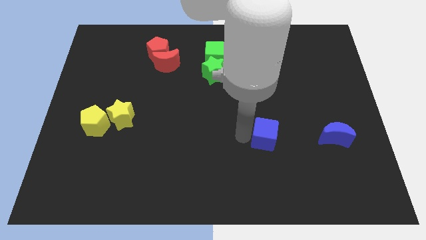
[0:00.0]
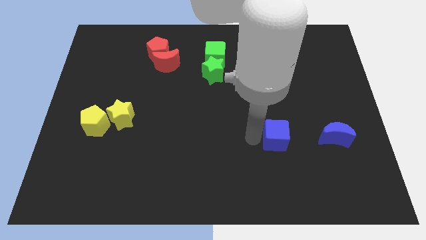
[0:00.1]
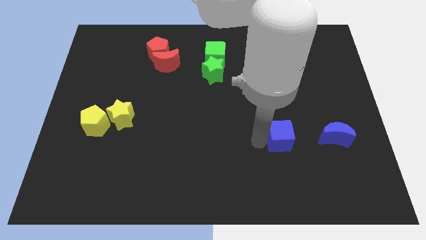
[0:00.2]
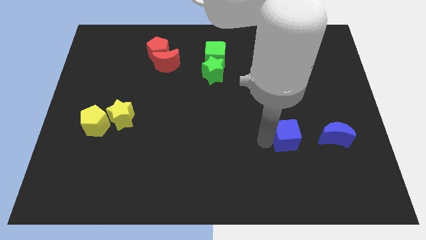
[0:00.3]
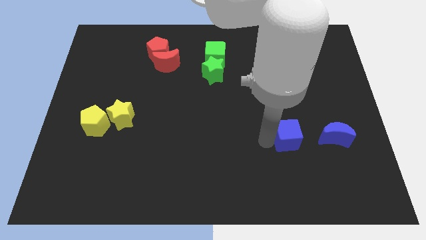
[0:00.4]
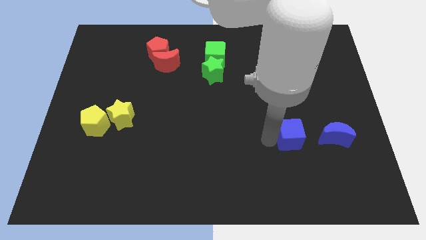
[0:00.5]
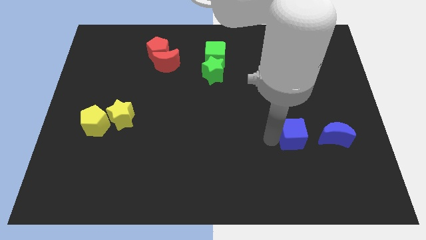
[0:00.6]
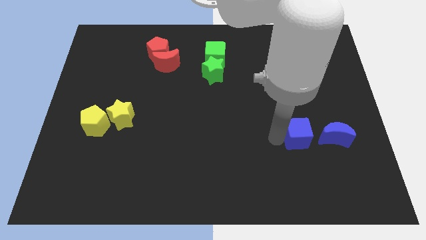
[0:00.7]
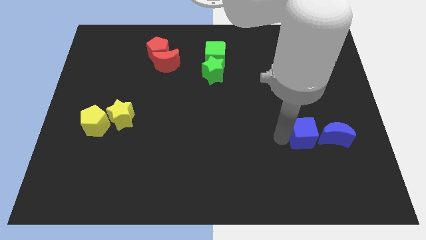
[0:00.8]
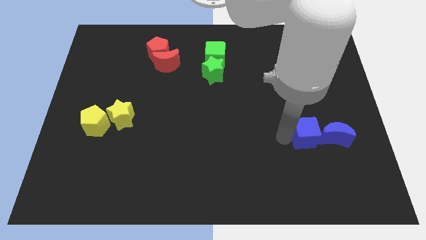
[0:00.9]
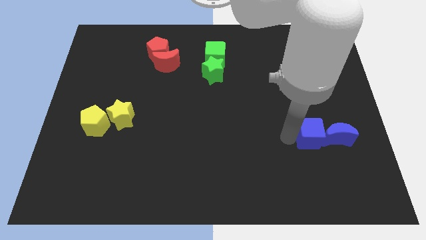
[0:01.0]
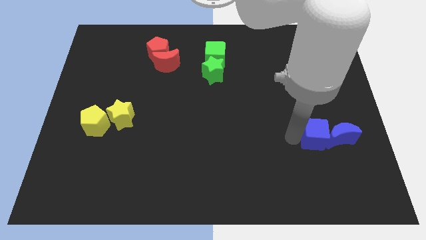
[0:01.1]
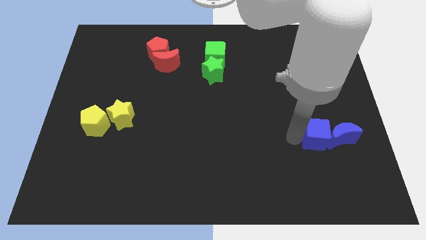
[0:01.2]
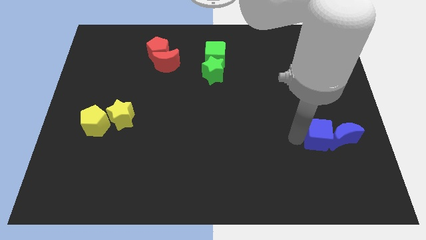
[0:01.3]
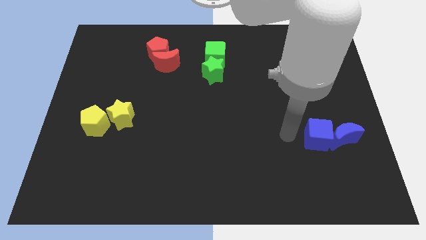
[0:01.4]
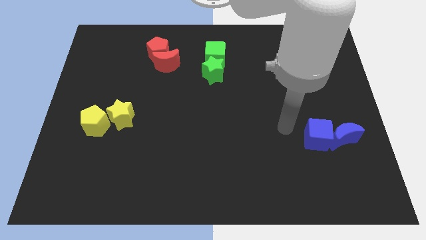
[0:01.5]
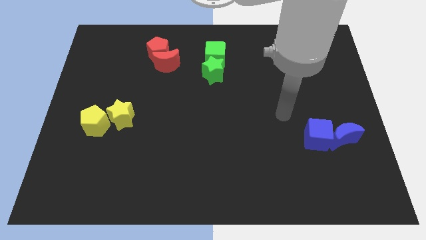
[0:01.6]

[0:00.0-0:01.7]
push the blue cube into the blue crescent

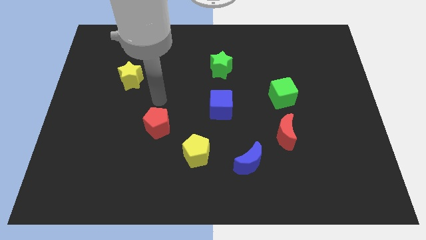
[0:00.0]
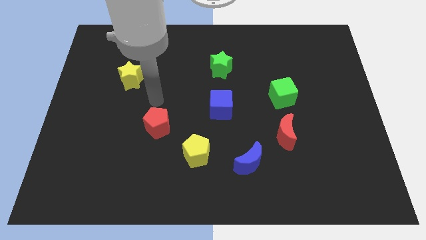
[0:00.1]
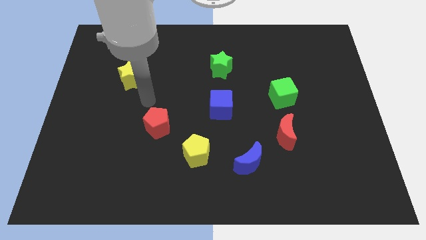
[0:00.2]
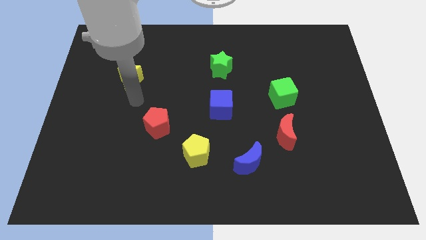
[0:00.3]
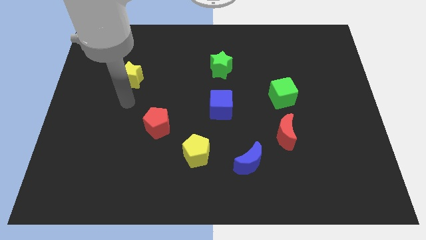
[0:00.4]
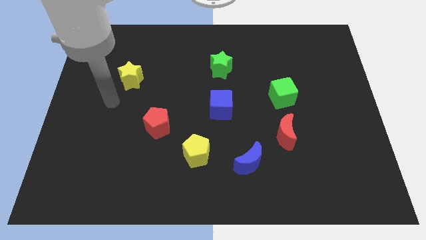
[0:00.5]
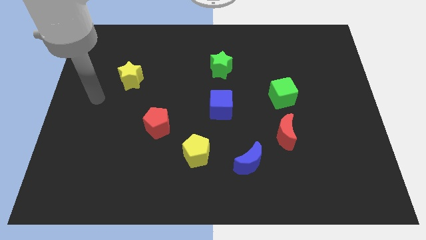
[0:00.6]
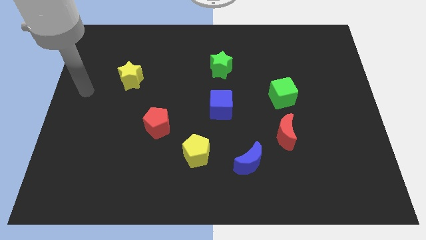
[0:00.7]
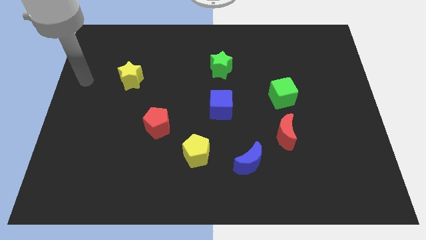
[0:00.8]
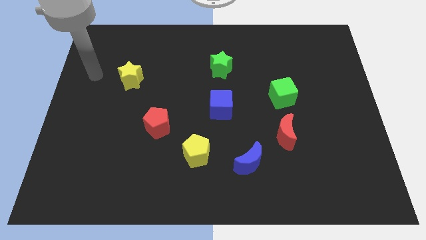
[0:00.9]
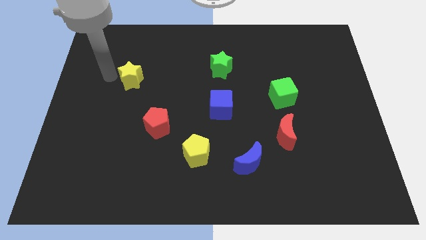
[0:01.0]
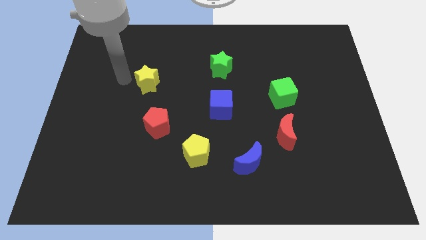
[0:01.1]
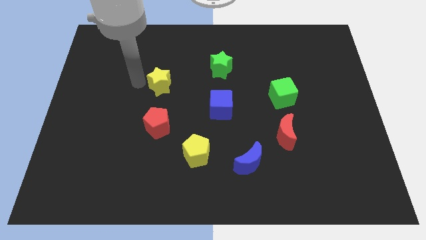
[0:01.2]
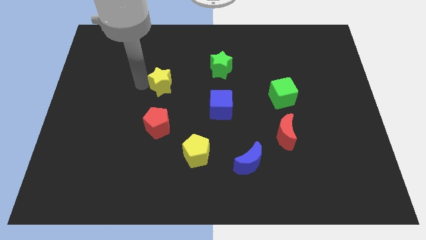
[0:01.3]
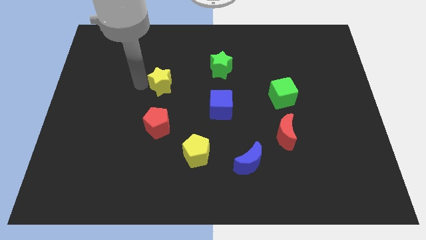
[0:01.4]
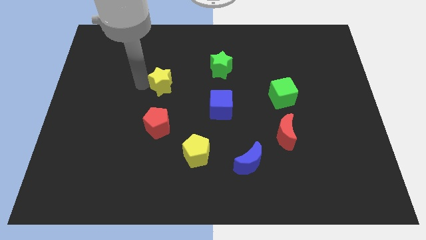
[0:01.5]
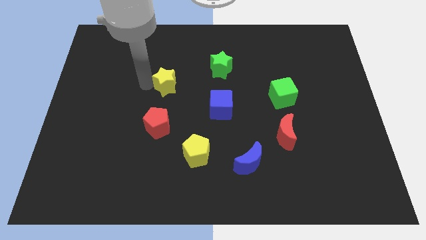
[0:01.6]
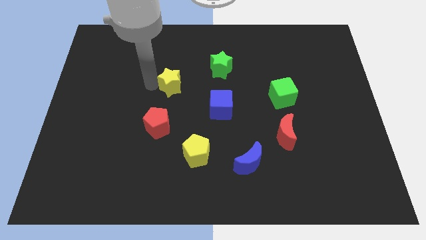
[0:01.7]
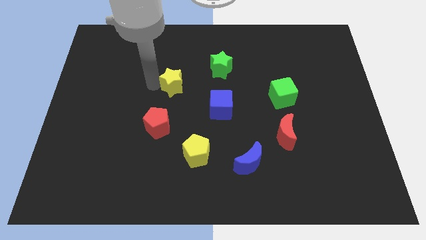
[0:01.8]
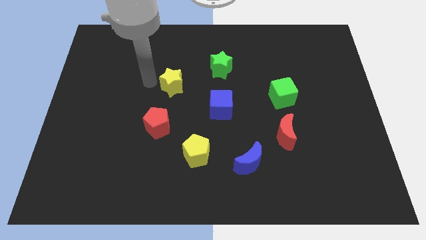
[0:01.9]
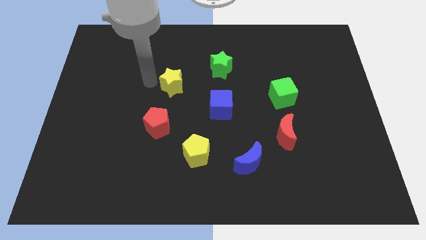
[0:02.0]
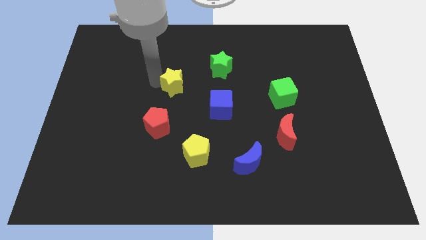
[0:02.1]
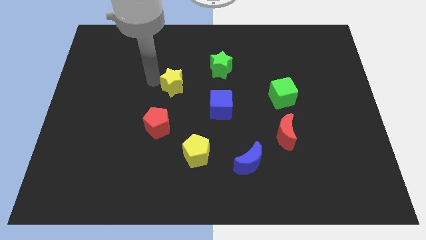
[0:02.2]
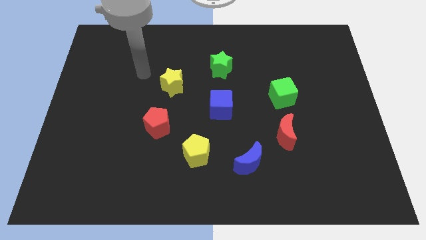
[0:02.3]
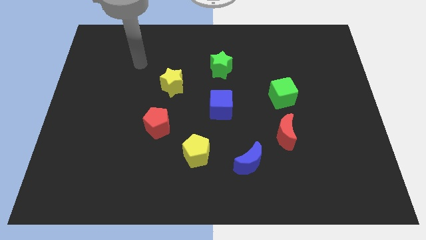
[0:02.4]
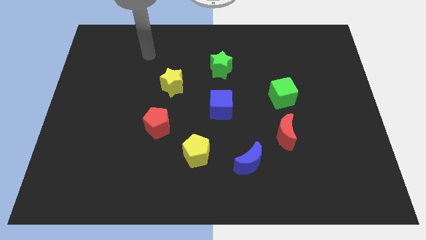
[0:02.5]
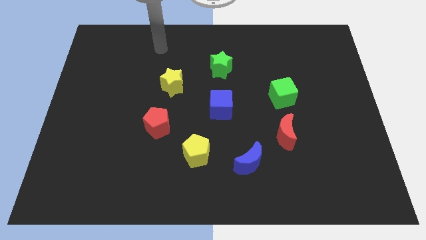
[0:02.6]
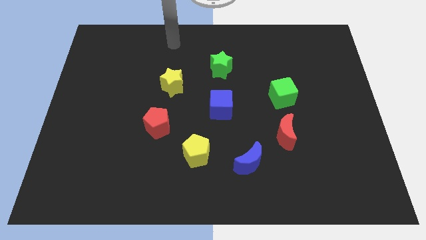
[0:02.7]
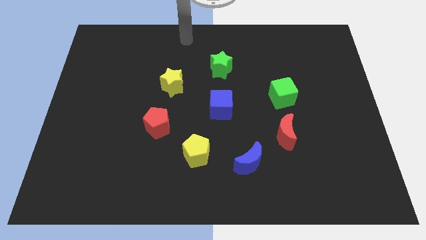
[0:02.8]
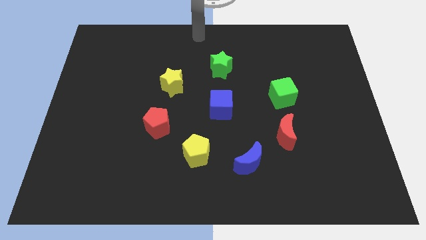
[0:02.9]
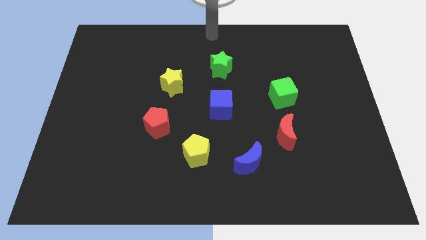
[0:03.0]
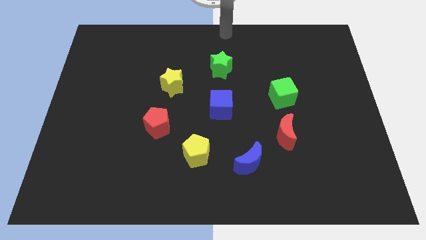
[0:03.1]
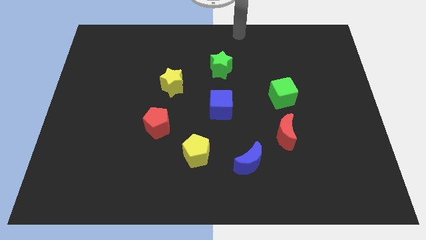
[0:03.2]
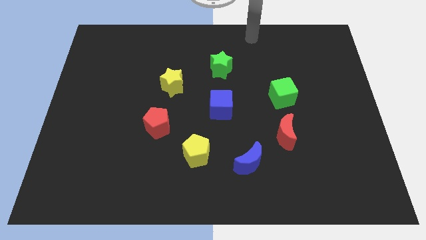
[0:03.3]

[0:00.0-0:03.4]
move the yellow star to the center of the board

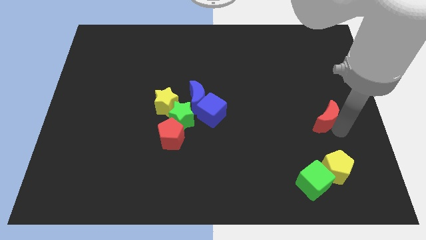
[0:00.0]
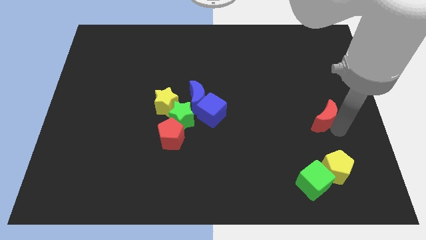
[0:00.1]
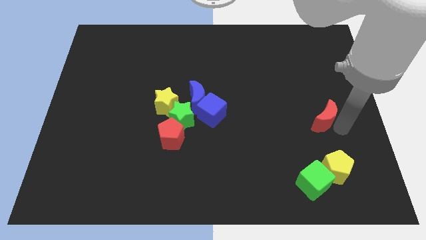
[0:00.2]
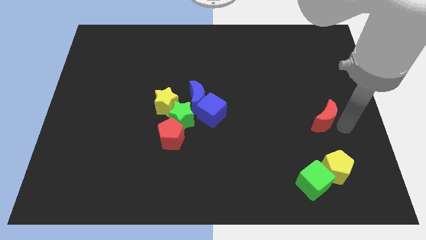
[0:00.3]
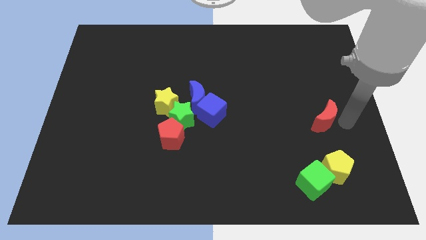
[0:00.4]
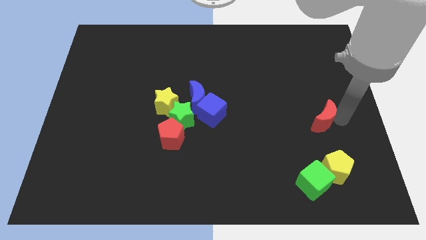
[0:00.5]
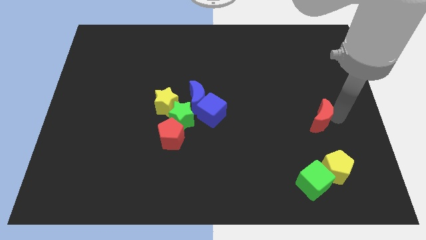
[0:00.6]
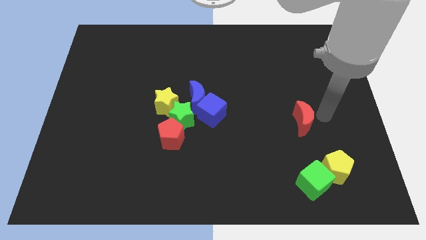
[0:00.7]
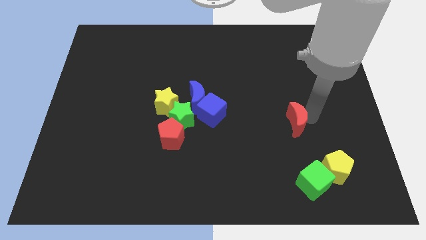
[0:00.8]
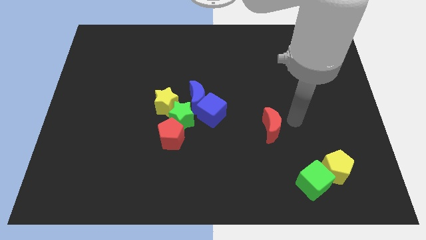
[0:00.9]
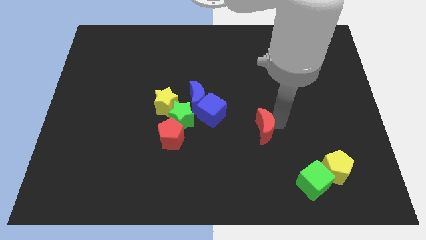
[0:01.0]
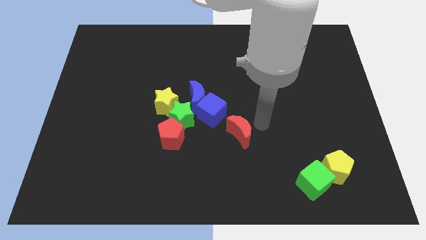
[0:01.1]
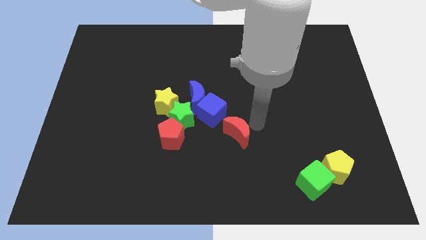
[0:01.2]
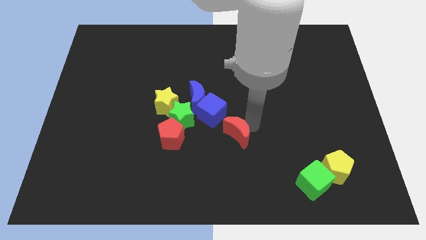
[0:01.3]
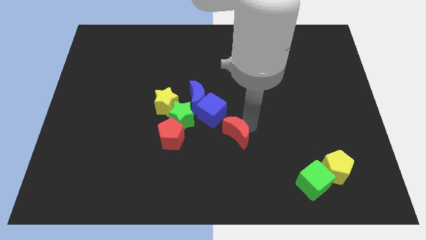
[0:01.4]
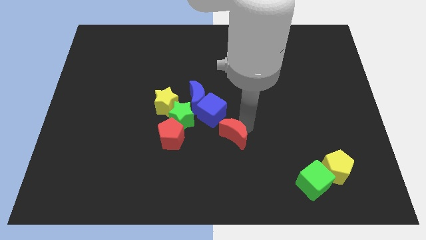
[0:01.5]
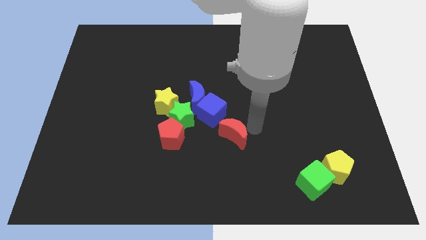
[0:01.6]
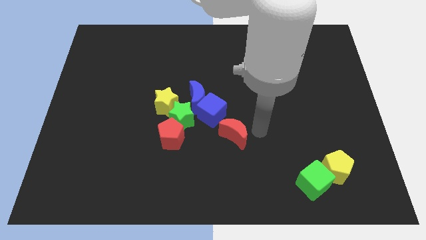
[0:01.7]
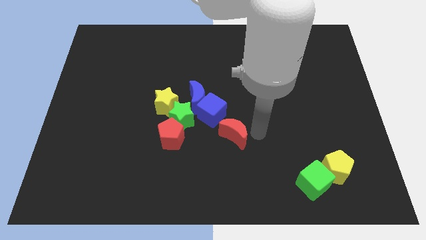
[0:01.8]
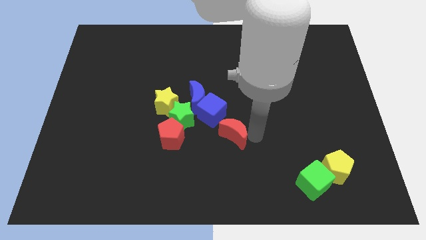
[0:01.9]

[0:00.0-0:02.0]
drag red crescent close to blue cube

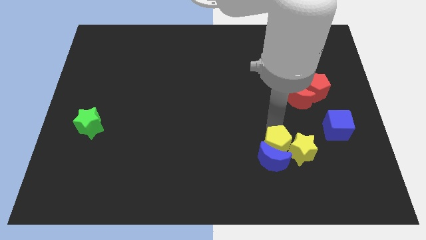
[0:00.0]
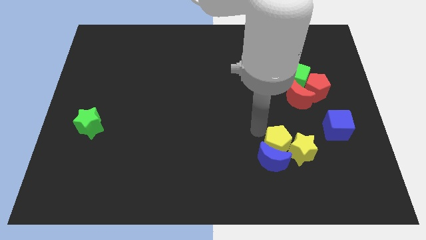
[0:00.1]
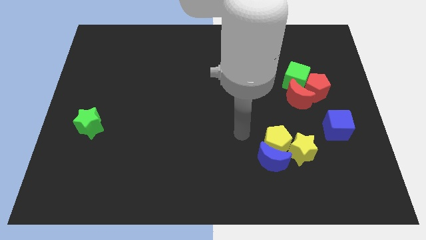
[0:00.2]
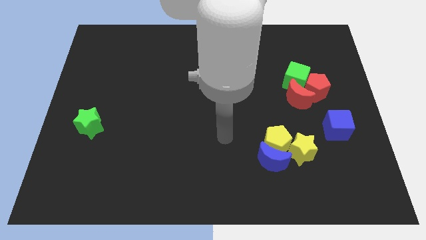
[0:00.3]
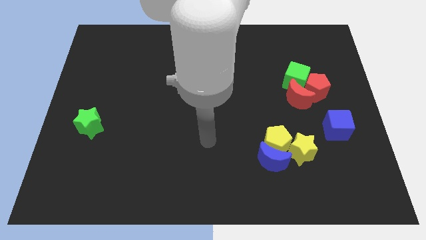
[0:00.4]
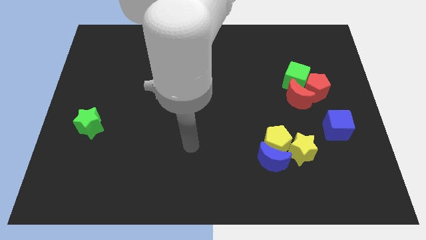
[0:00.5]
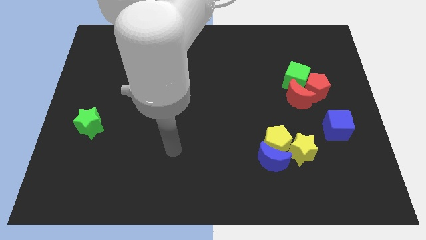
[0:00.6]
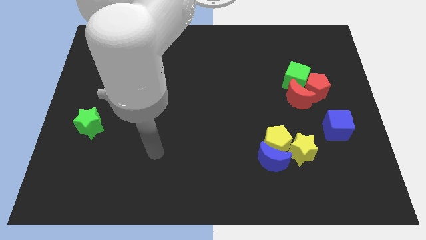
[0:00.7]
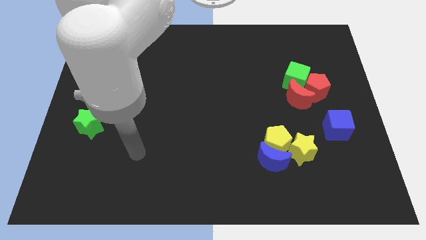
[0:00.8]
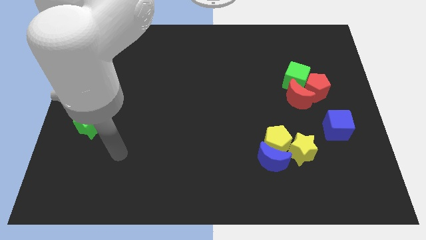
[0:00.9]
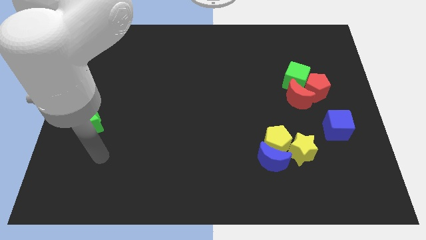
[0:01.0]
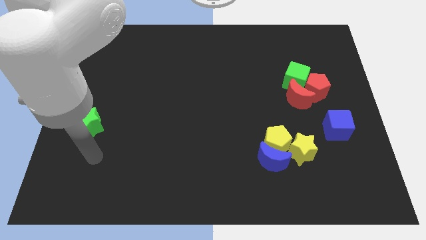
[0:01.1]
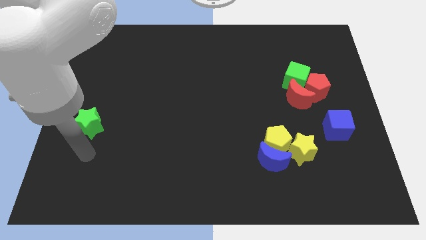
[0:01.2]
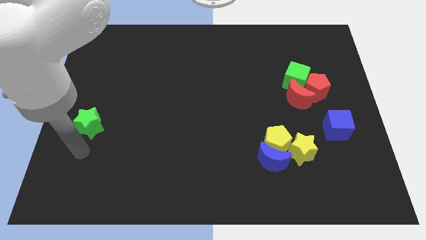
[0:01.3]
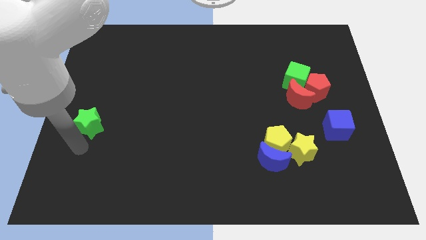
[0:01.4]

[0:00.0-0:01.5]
move your arm to the bottom of green star

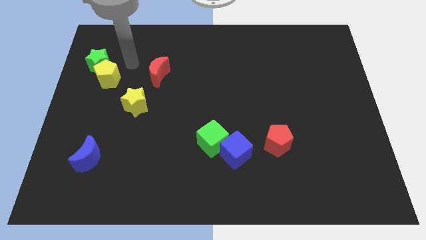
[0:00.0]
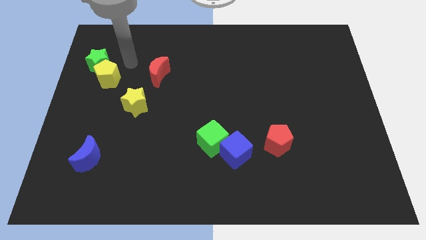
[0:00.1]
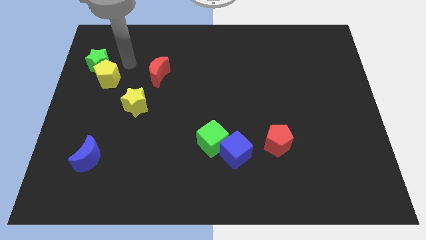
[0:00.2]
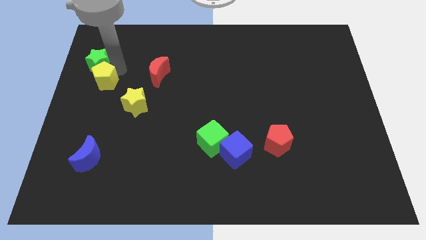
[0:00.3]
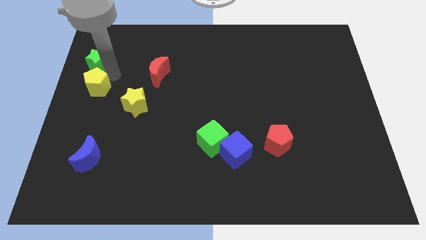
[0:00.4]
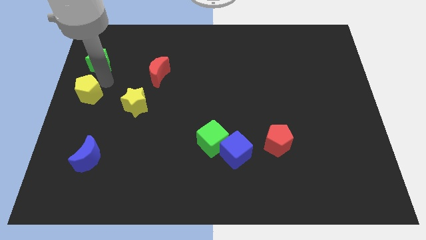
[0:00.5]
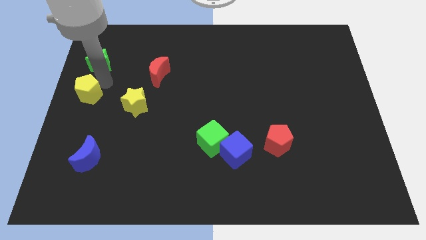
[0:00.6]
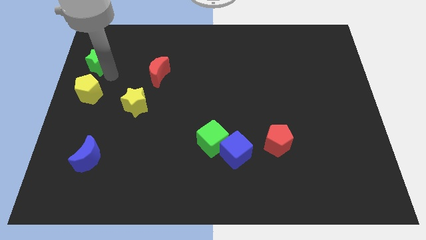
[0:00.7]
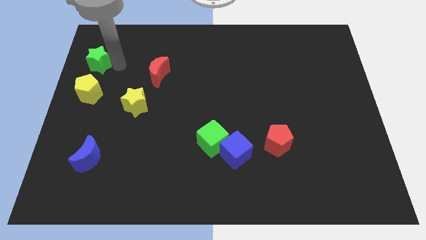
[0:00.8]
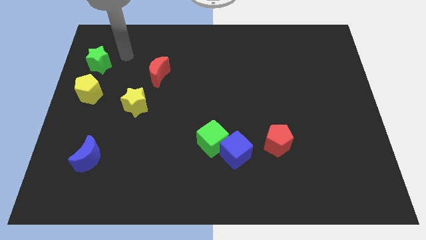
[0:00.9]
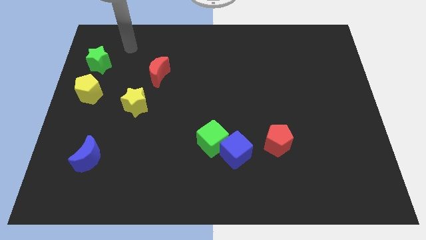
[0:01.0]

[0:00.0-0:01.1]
move yellow pentagon from green star
